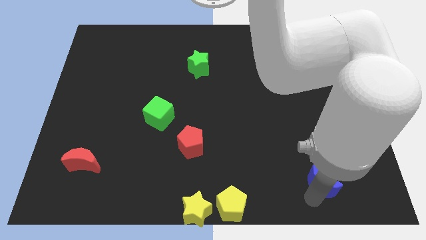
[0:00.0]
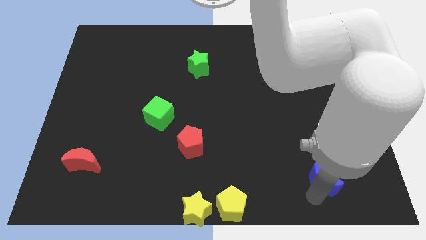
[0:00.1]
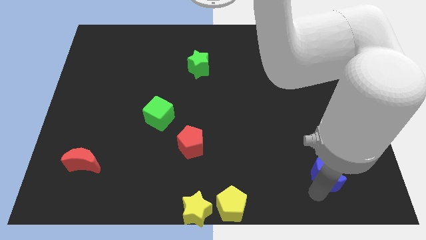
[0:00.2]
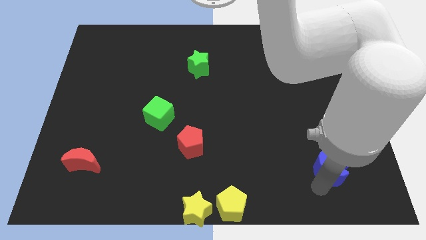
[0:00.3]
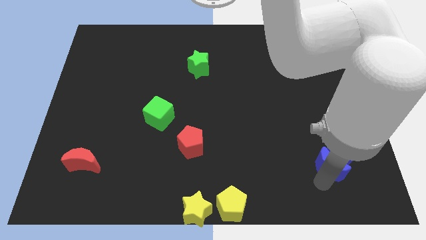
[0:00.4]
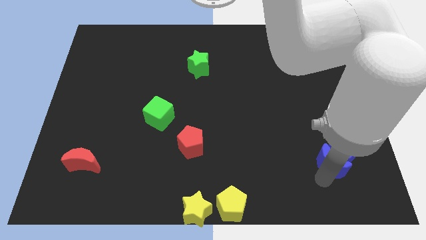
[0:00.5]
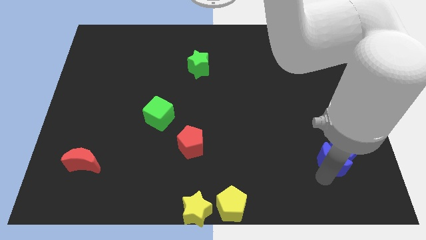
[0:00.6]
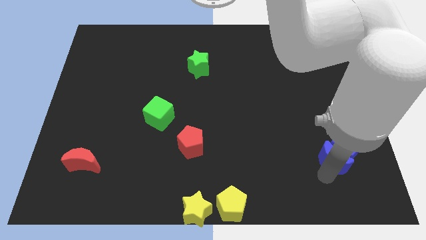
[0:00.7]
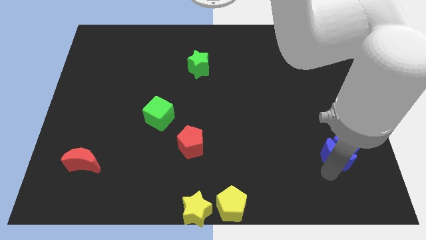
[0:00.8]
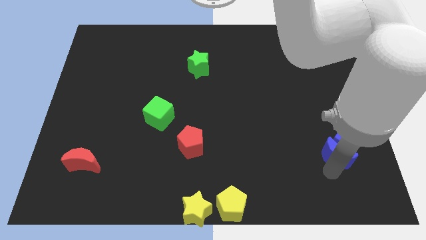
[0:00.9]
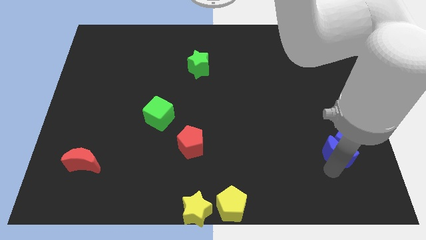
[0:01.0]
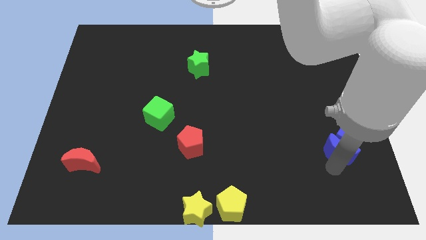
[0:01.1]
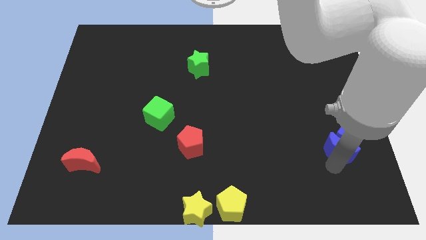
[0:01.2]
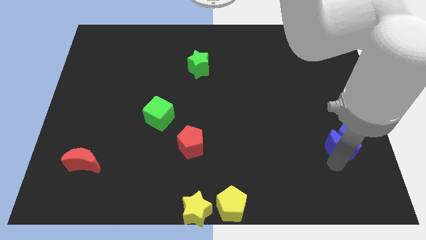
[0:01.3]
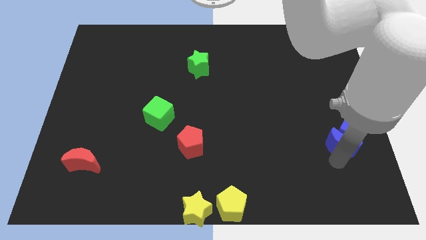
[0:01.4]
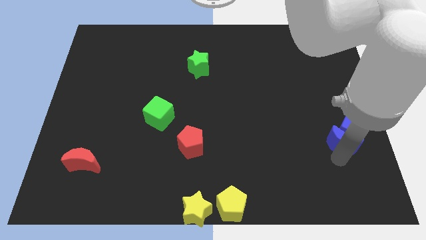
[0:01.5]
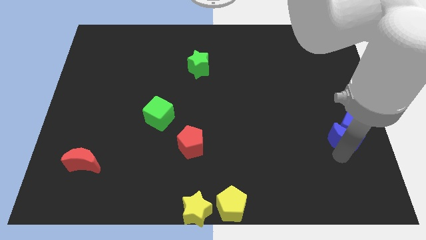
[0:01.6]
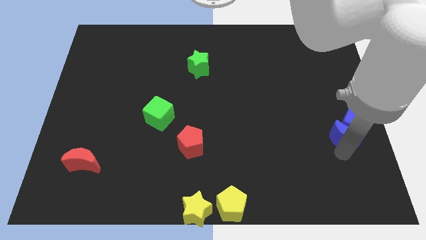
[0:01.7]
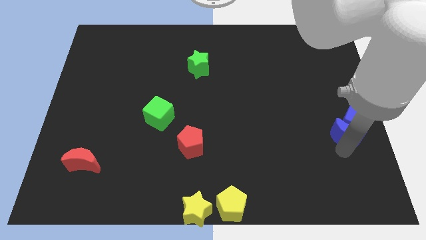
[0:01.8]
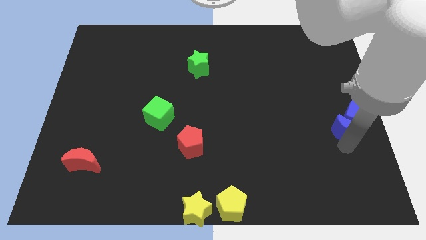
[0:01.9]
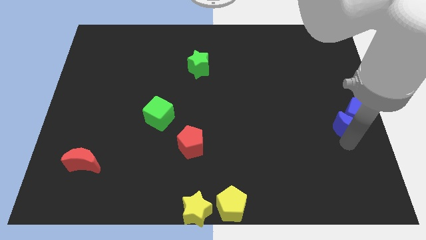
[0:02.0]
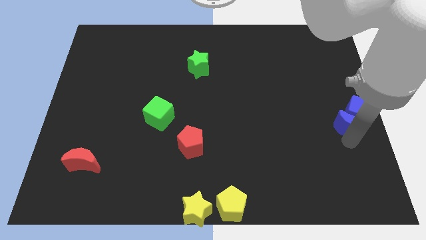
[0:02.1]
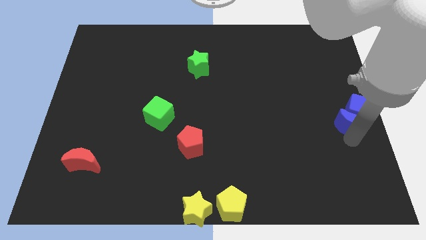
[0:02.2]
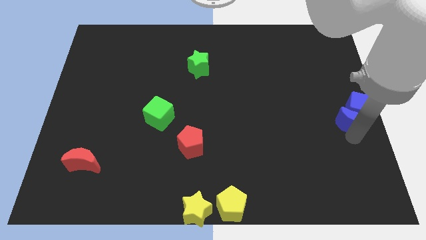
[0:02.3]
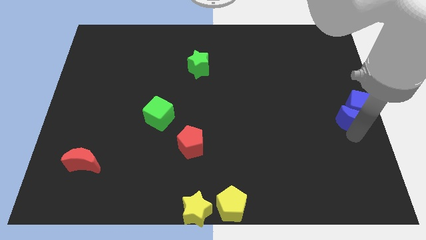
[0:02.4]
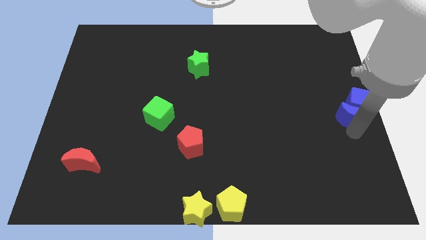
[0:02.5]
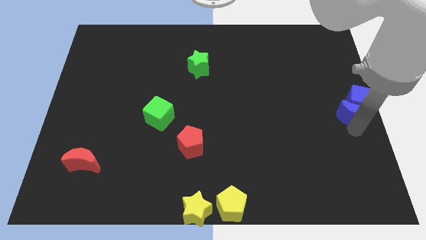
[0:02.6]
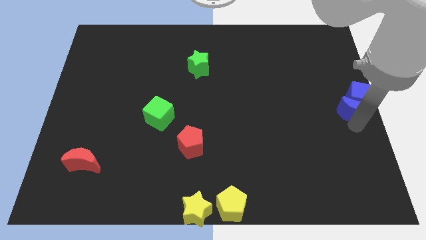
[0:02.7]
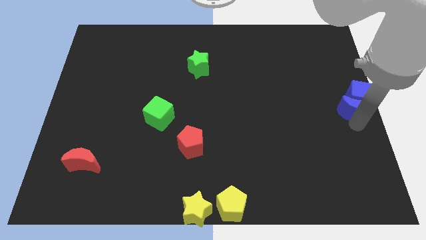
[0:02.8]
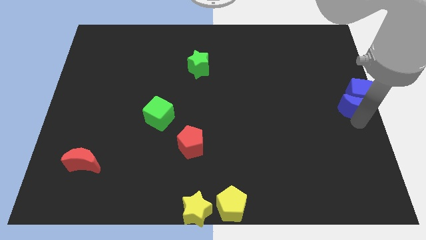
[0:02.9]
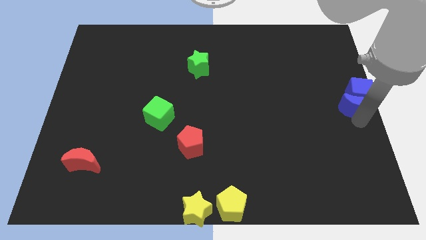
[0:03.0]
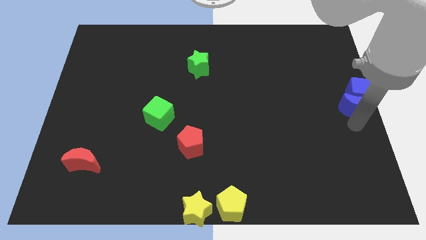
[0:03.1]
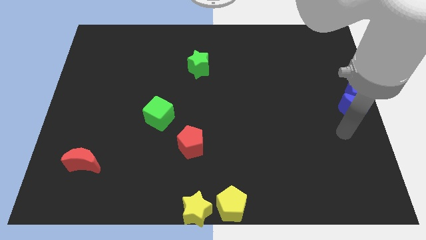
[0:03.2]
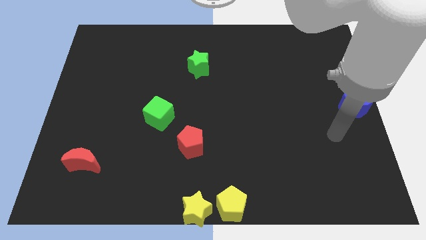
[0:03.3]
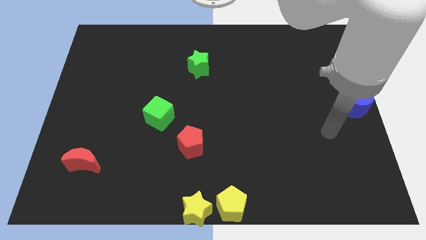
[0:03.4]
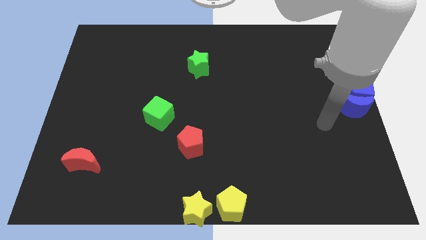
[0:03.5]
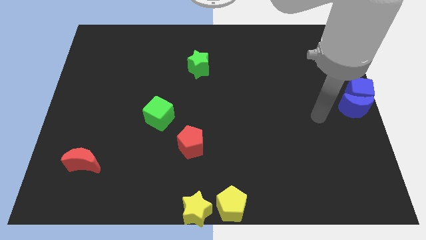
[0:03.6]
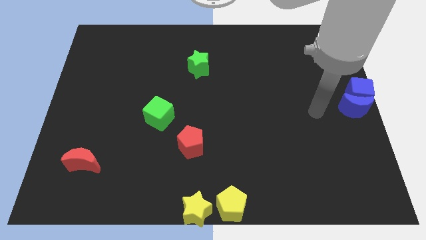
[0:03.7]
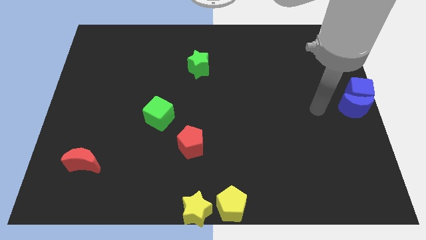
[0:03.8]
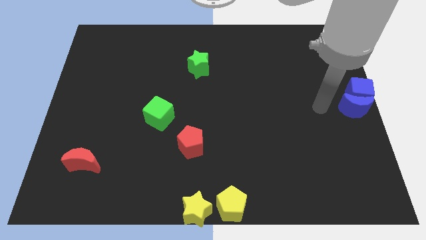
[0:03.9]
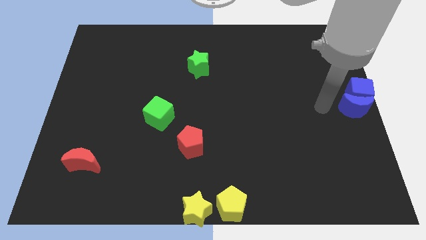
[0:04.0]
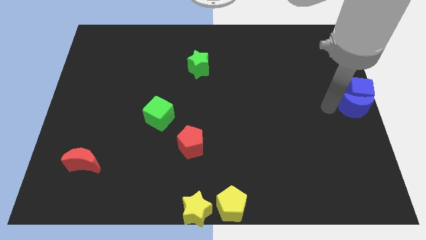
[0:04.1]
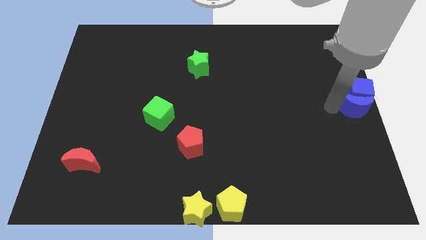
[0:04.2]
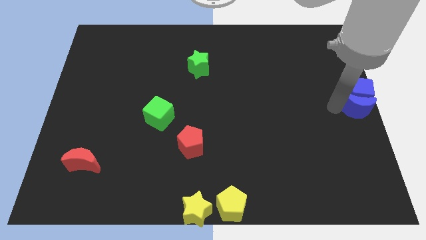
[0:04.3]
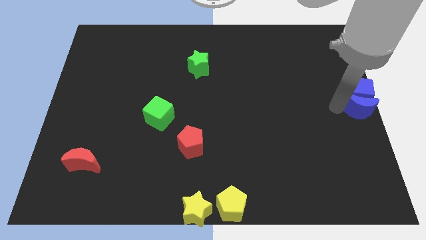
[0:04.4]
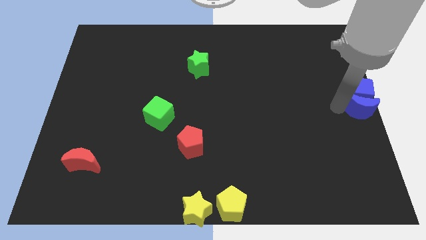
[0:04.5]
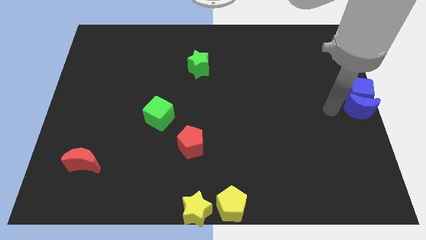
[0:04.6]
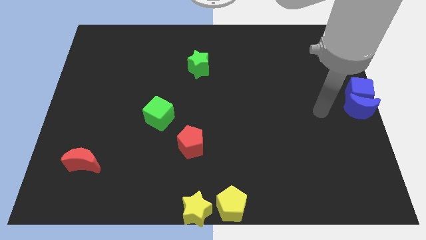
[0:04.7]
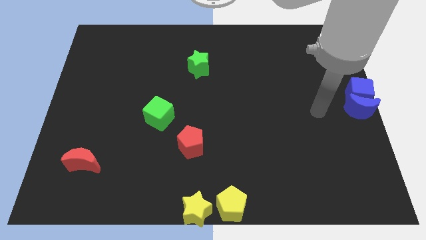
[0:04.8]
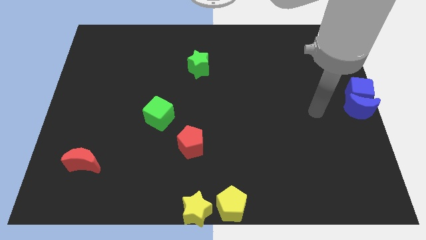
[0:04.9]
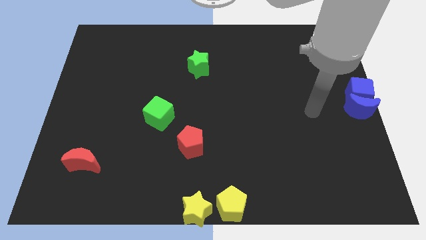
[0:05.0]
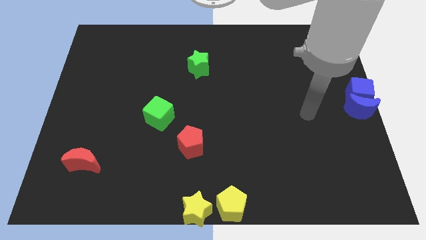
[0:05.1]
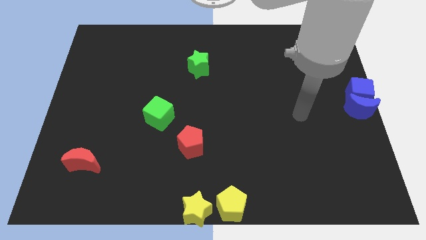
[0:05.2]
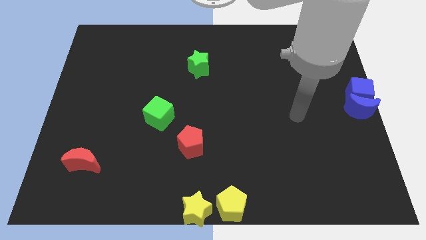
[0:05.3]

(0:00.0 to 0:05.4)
push the blue cube to the left center of the board with the blue crescent
